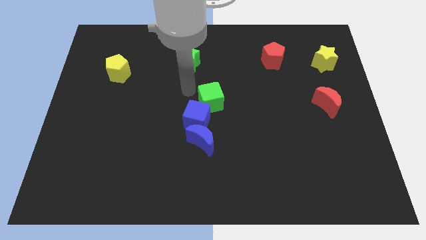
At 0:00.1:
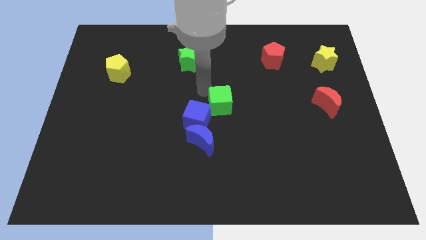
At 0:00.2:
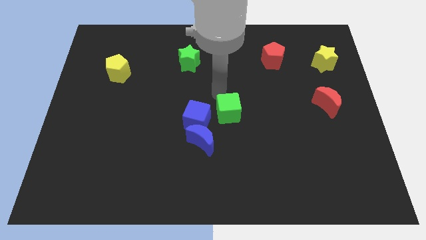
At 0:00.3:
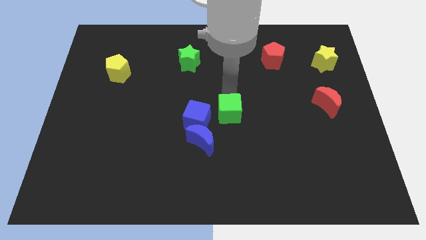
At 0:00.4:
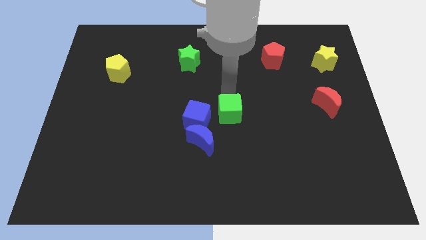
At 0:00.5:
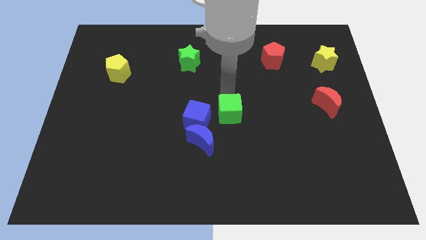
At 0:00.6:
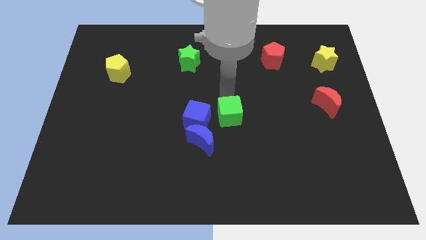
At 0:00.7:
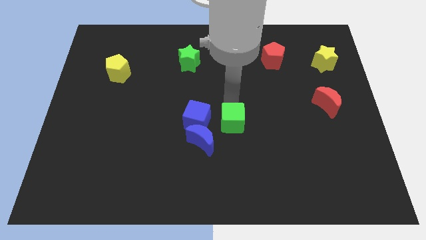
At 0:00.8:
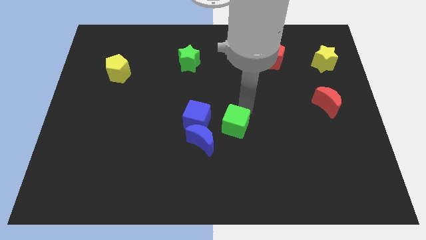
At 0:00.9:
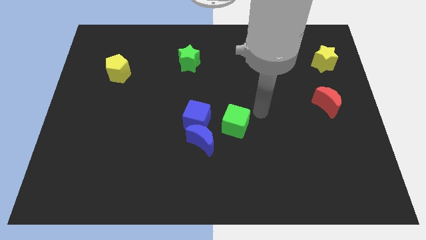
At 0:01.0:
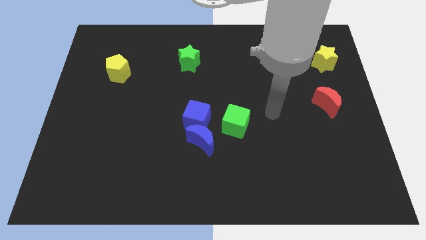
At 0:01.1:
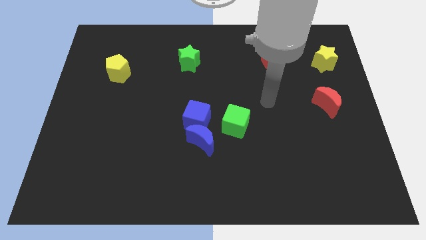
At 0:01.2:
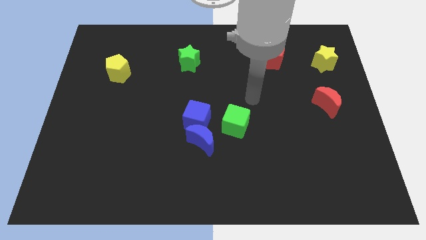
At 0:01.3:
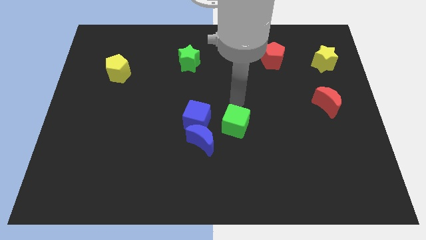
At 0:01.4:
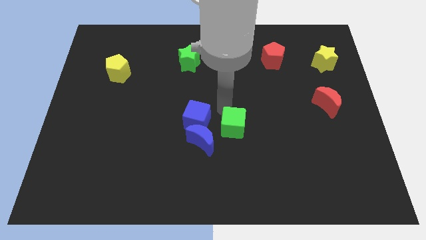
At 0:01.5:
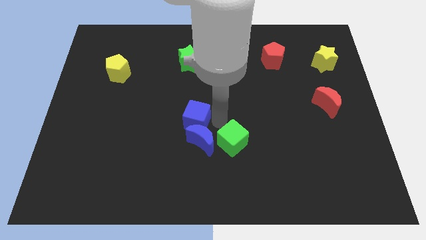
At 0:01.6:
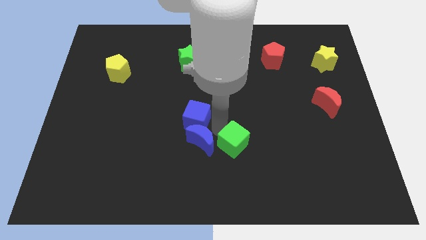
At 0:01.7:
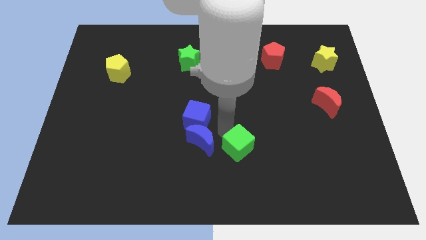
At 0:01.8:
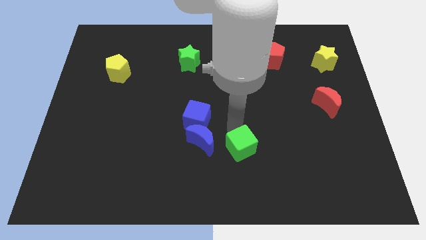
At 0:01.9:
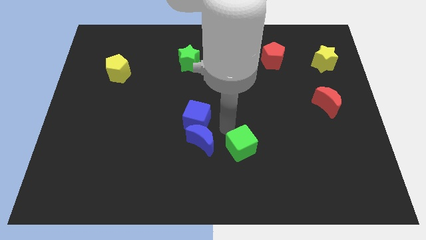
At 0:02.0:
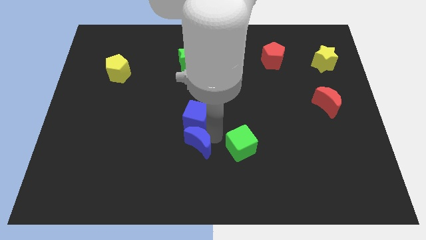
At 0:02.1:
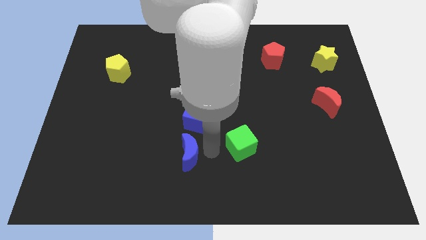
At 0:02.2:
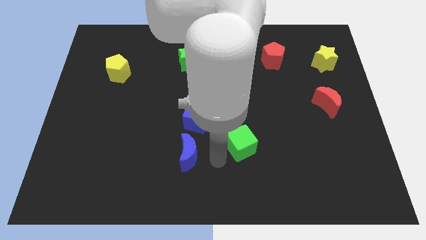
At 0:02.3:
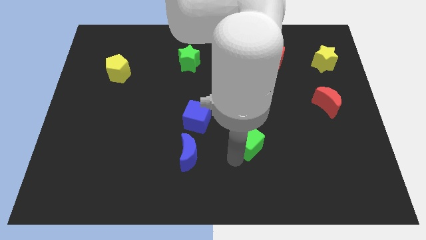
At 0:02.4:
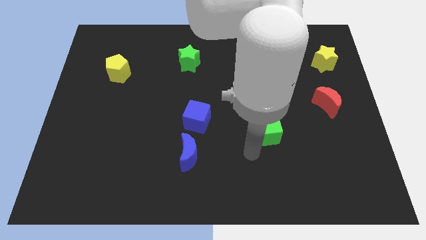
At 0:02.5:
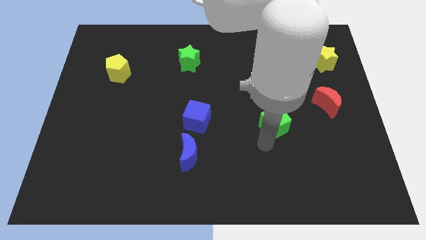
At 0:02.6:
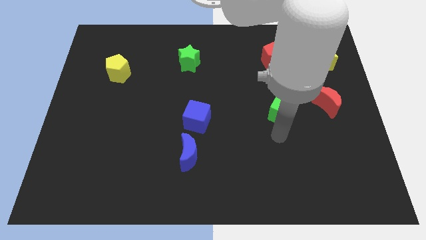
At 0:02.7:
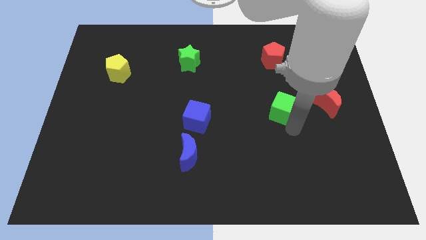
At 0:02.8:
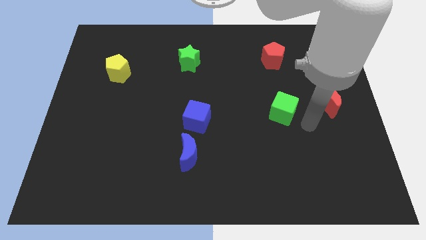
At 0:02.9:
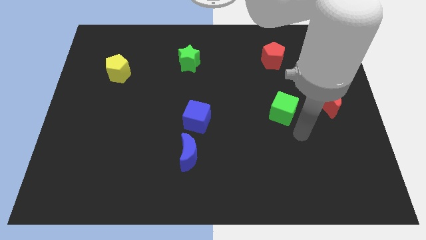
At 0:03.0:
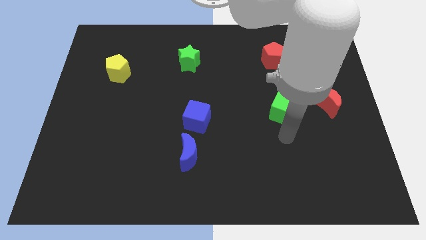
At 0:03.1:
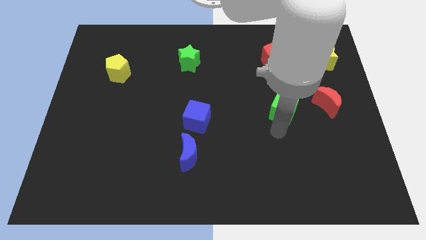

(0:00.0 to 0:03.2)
place green cube near red crescent

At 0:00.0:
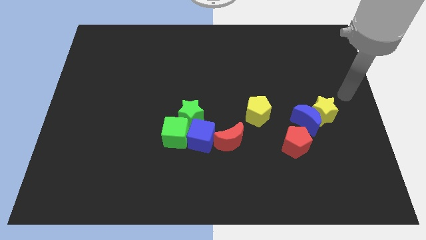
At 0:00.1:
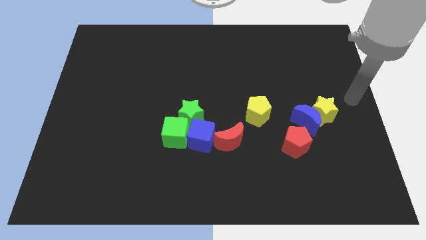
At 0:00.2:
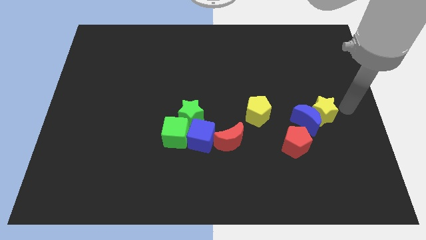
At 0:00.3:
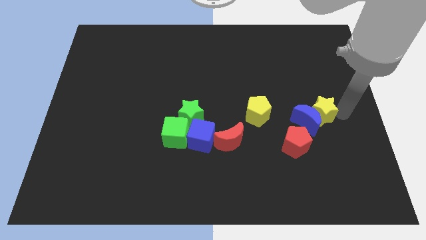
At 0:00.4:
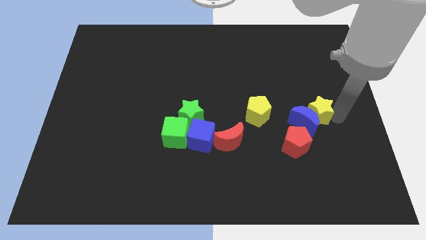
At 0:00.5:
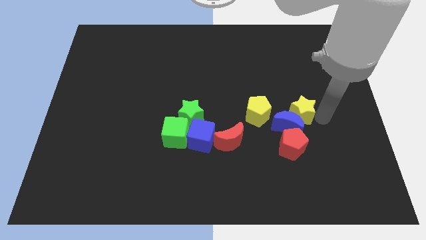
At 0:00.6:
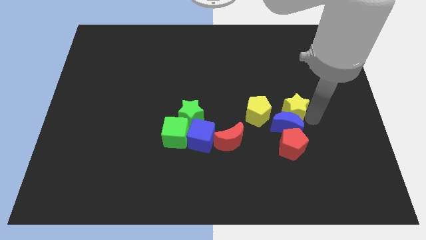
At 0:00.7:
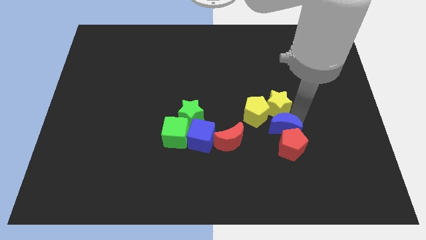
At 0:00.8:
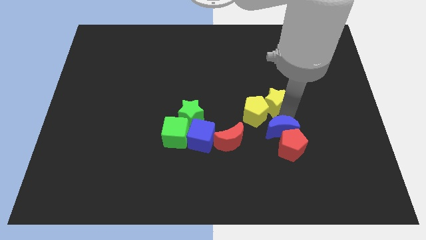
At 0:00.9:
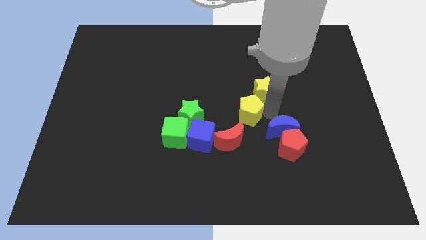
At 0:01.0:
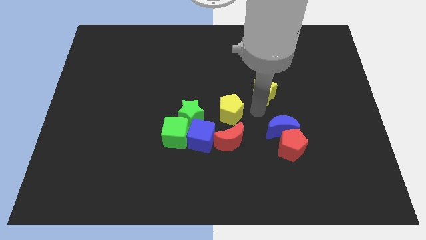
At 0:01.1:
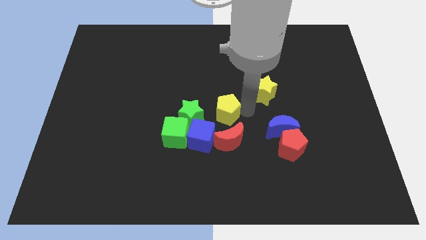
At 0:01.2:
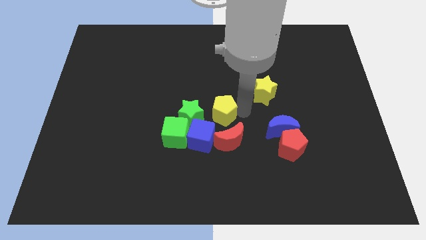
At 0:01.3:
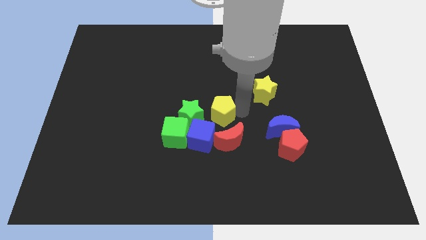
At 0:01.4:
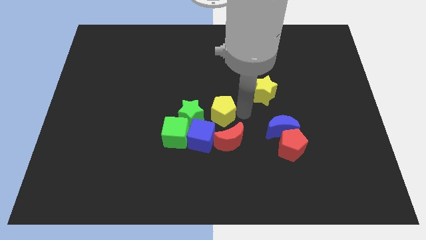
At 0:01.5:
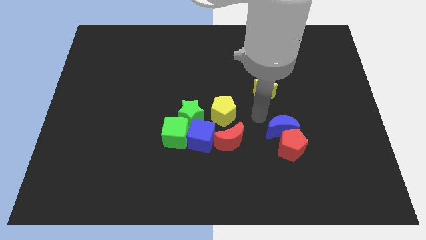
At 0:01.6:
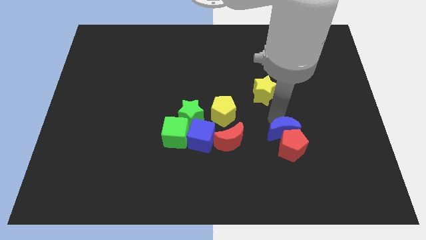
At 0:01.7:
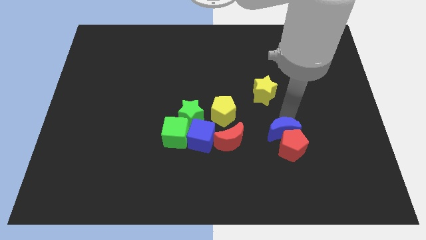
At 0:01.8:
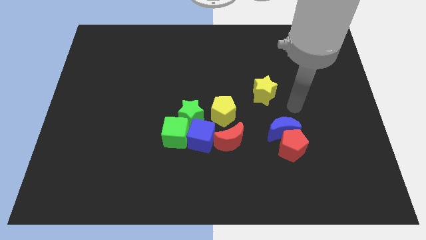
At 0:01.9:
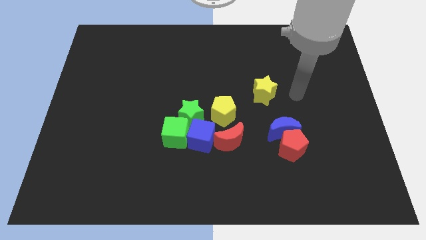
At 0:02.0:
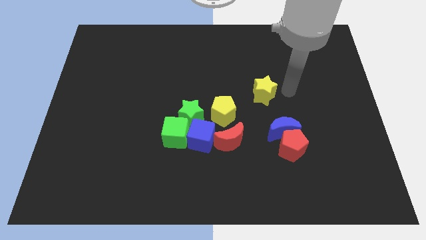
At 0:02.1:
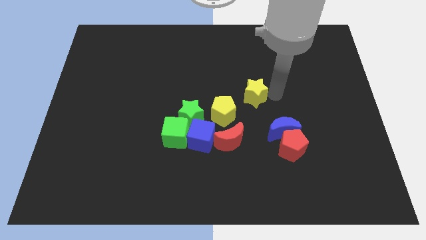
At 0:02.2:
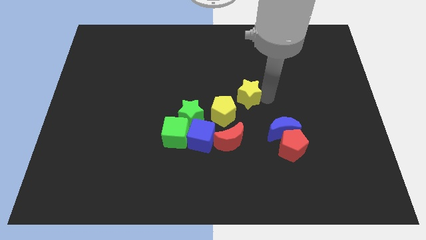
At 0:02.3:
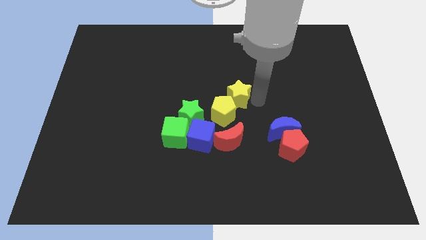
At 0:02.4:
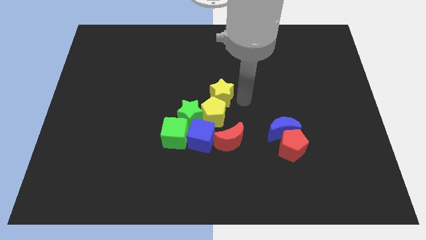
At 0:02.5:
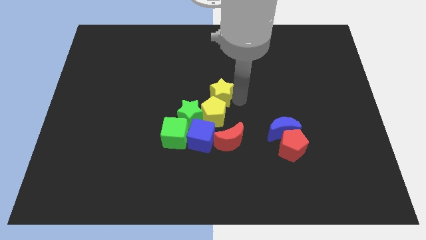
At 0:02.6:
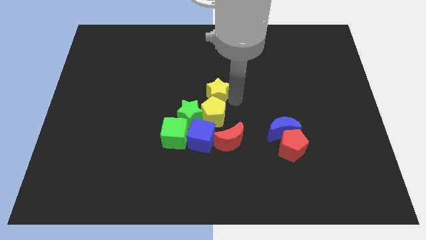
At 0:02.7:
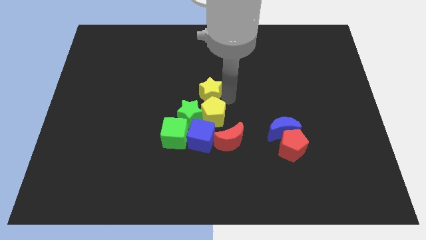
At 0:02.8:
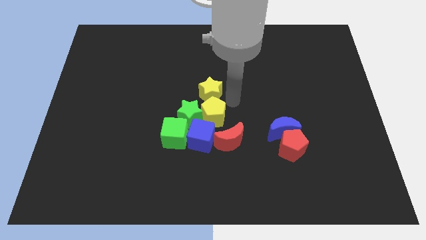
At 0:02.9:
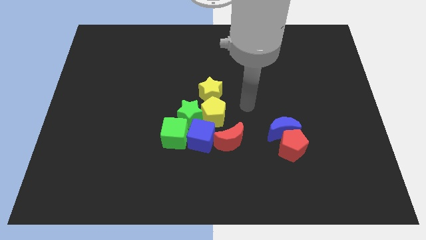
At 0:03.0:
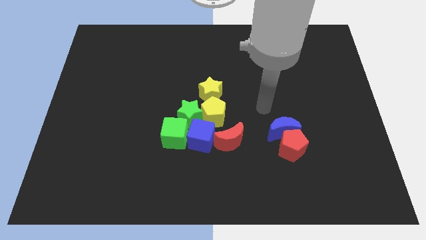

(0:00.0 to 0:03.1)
push yellow blocks towards green star

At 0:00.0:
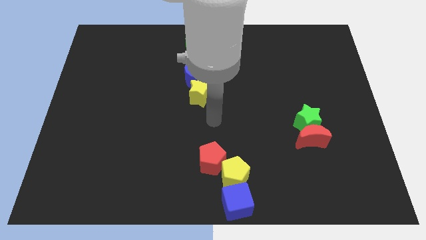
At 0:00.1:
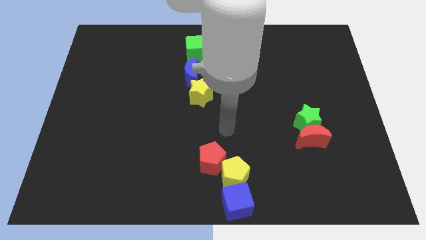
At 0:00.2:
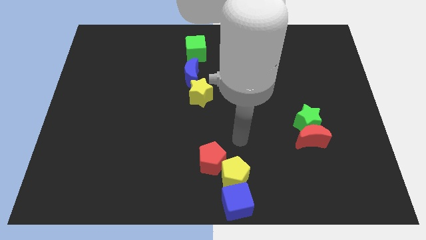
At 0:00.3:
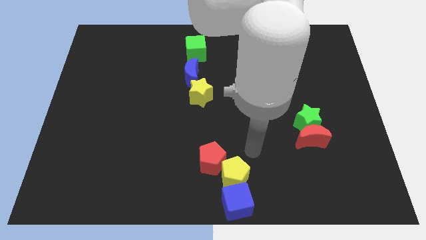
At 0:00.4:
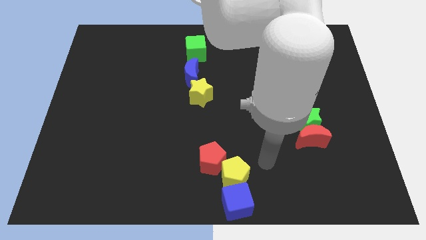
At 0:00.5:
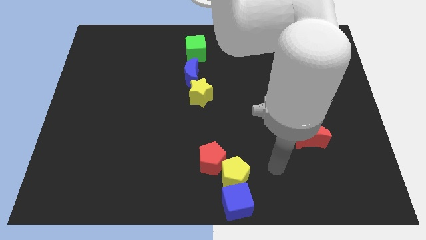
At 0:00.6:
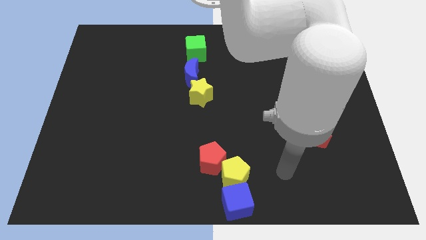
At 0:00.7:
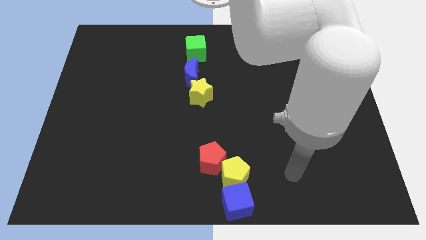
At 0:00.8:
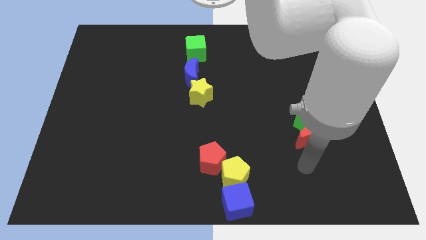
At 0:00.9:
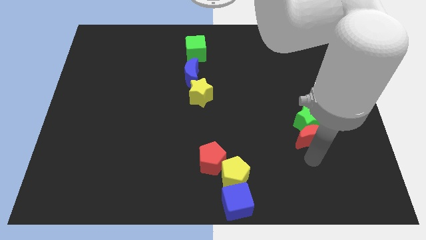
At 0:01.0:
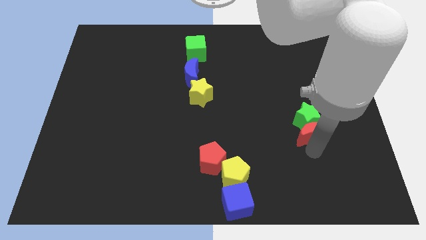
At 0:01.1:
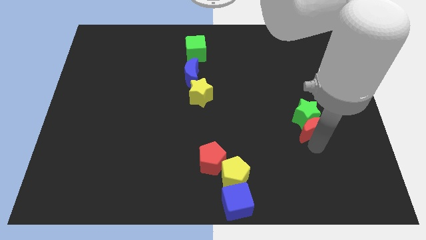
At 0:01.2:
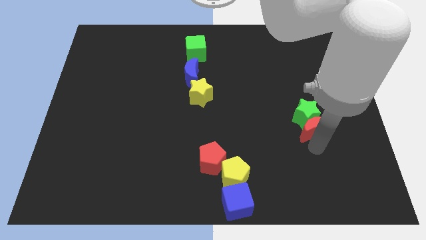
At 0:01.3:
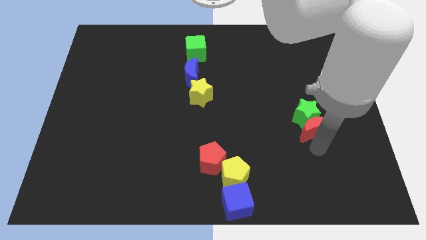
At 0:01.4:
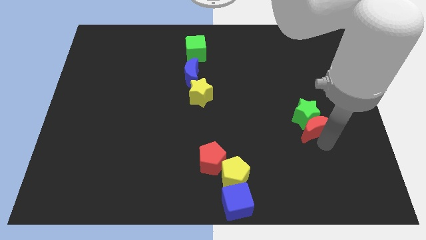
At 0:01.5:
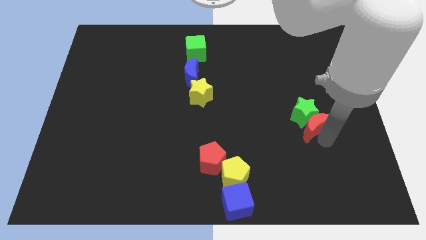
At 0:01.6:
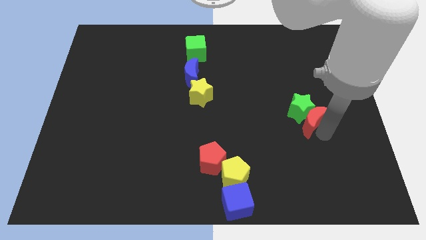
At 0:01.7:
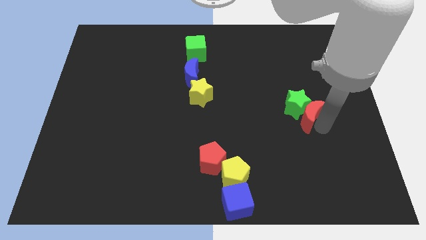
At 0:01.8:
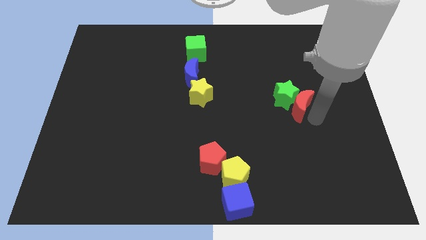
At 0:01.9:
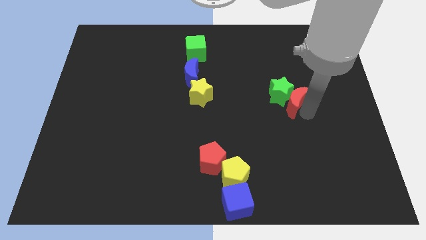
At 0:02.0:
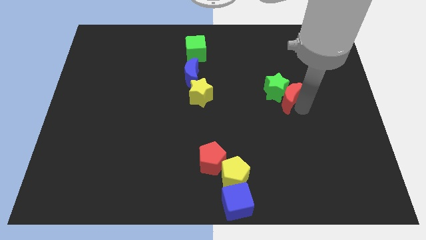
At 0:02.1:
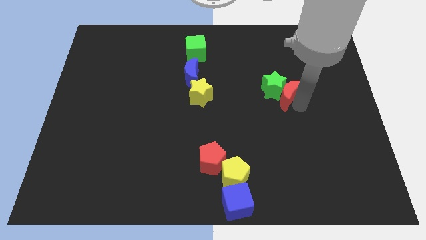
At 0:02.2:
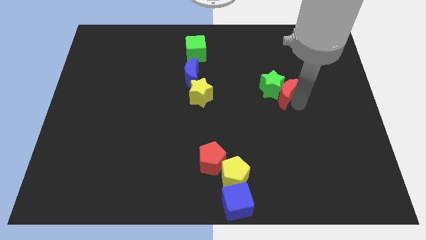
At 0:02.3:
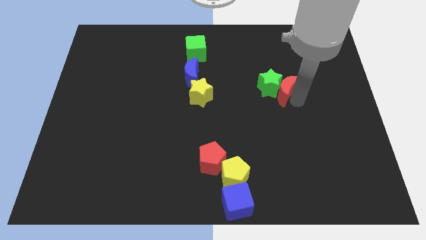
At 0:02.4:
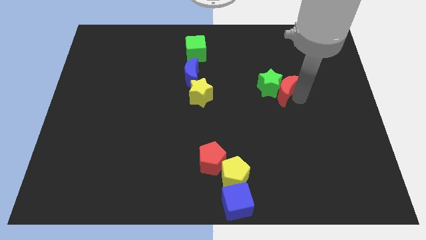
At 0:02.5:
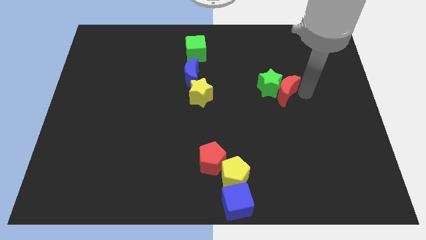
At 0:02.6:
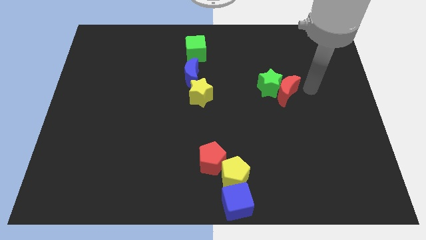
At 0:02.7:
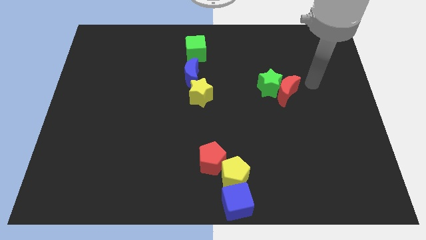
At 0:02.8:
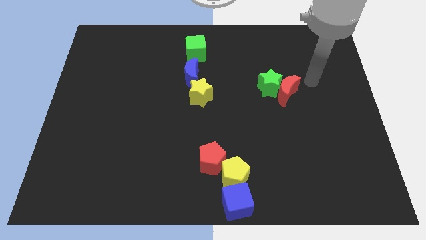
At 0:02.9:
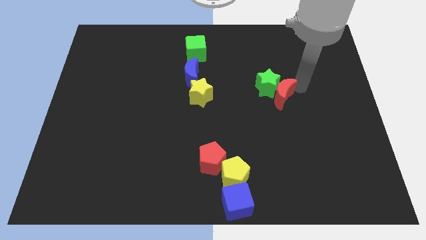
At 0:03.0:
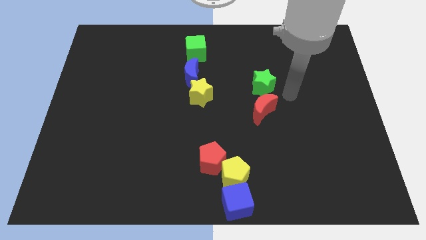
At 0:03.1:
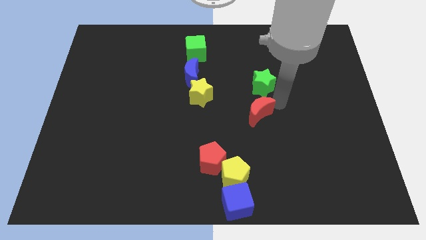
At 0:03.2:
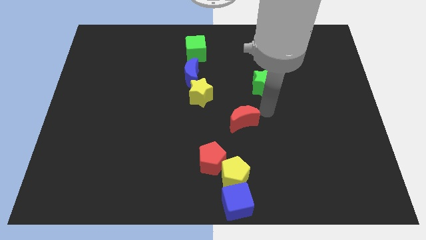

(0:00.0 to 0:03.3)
push the red moon with green star towards right of yellow pentagon
